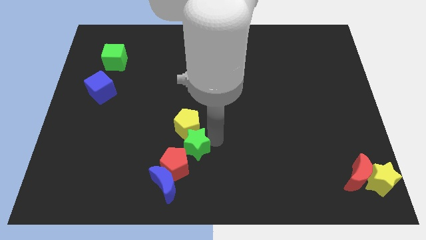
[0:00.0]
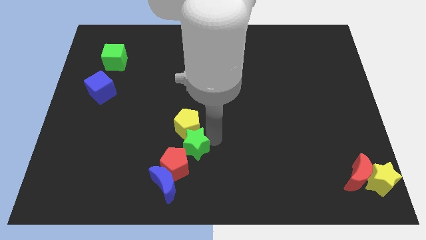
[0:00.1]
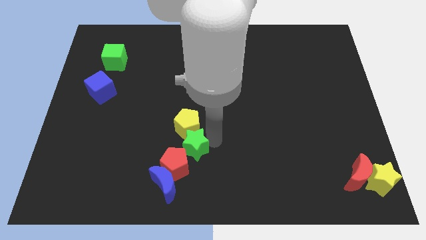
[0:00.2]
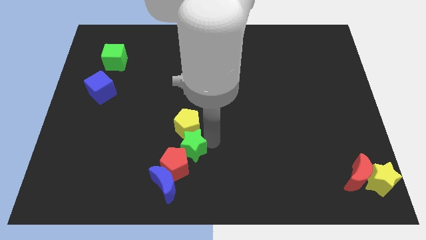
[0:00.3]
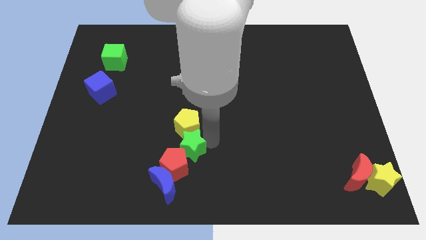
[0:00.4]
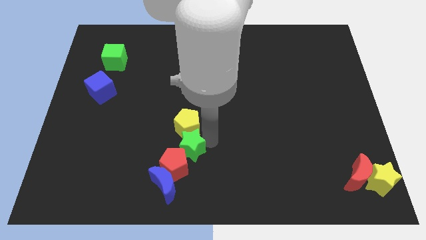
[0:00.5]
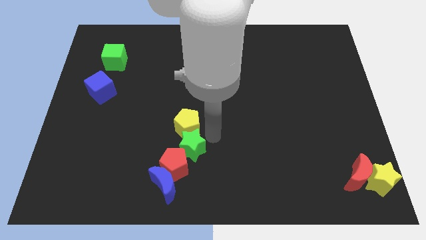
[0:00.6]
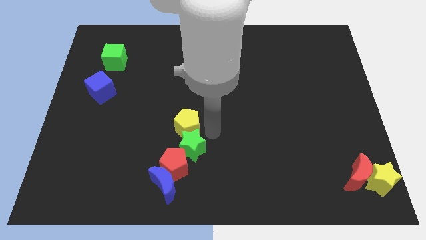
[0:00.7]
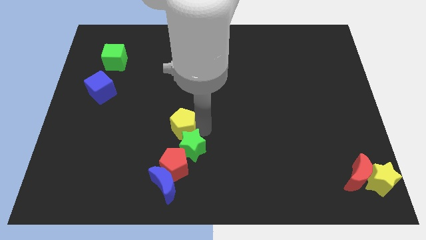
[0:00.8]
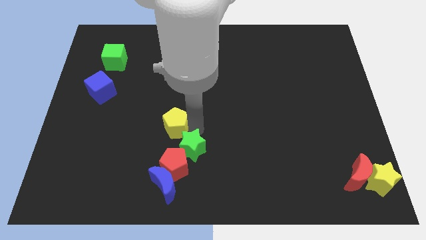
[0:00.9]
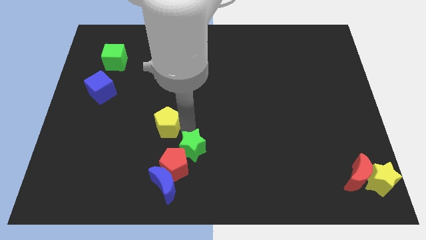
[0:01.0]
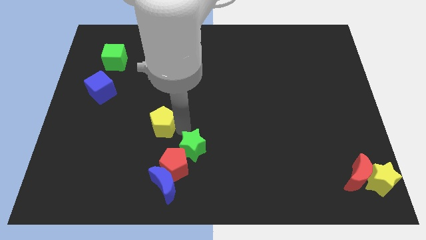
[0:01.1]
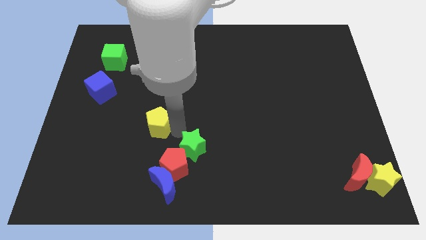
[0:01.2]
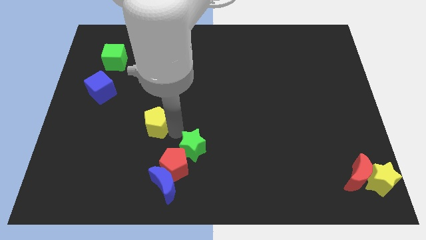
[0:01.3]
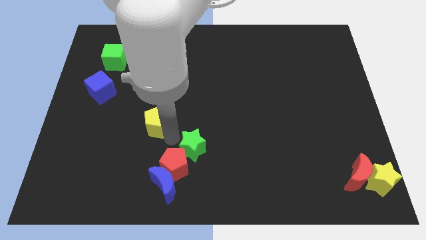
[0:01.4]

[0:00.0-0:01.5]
place yellow pentagon above red pentagon

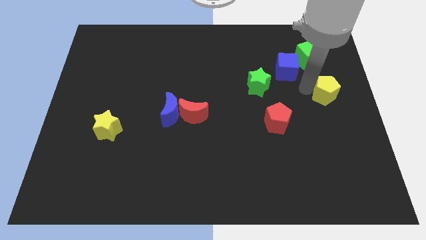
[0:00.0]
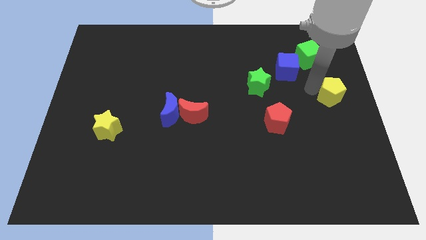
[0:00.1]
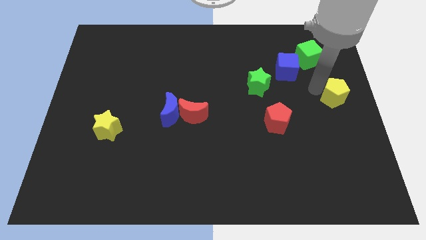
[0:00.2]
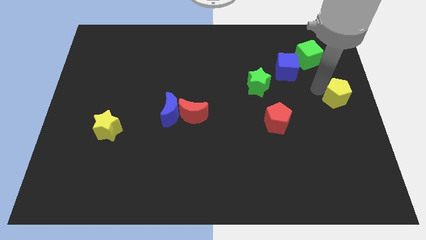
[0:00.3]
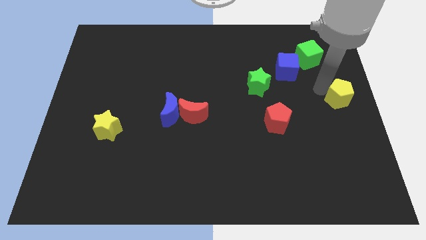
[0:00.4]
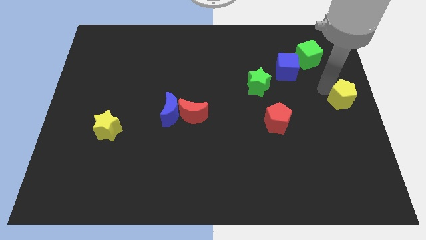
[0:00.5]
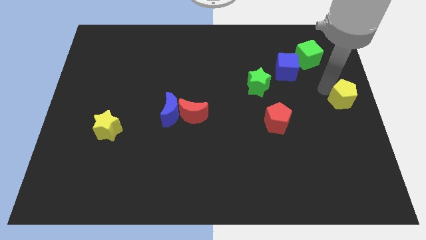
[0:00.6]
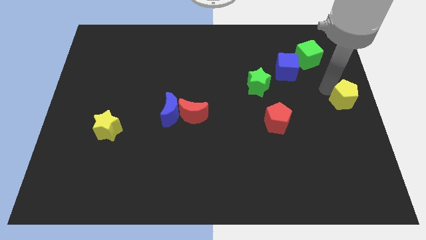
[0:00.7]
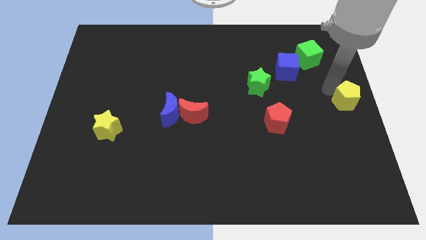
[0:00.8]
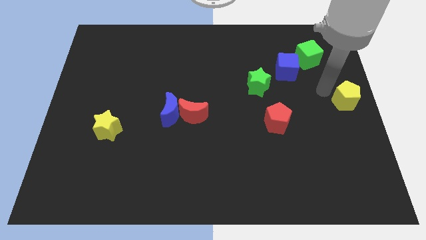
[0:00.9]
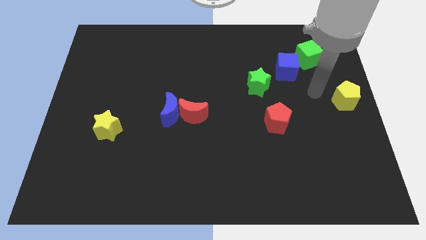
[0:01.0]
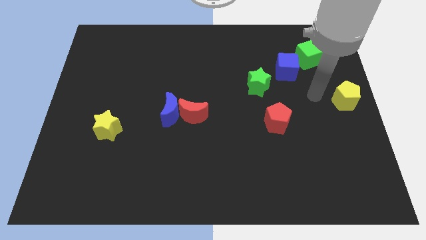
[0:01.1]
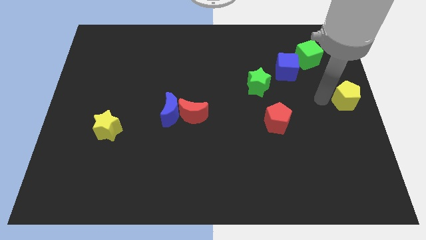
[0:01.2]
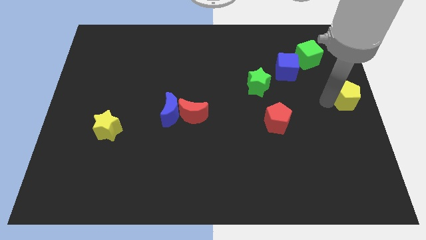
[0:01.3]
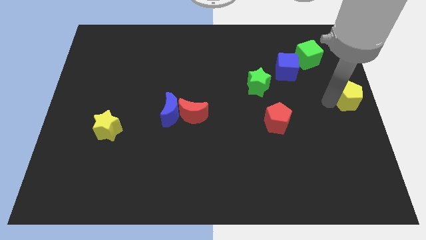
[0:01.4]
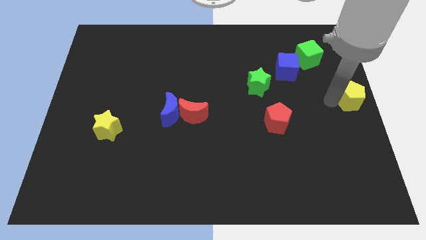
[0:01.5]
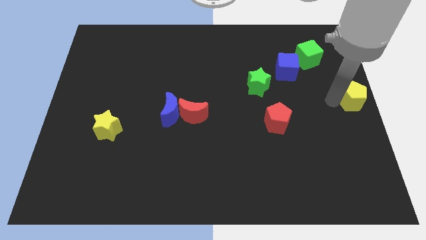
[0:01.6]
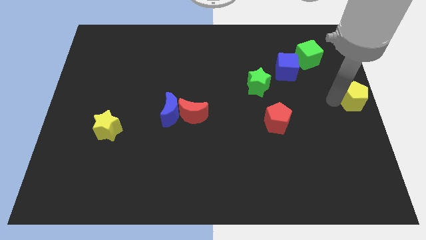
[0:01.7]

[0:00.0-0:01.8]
place the yellow pentagon towards the center right side of the board

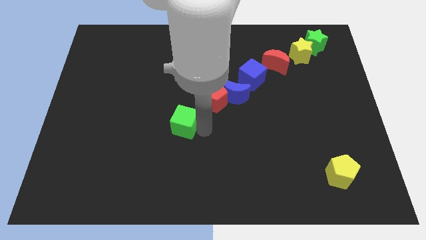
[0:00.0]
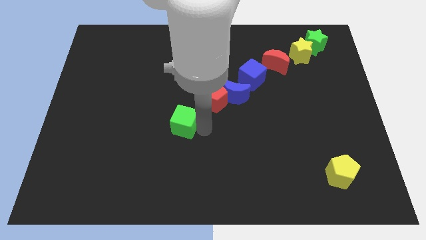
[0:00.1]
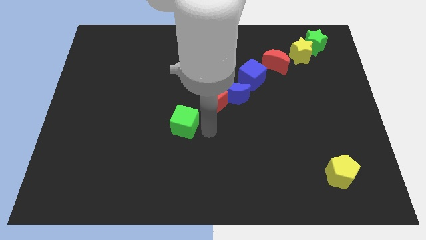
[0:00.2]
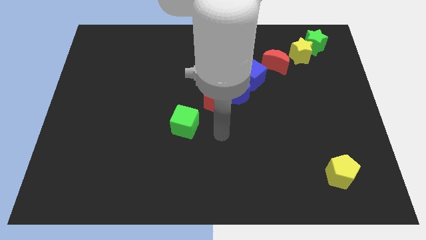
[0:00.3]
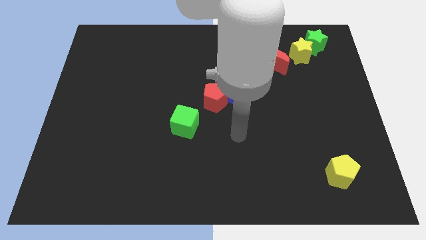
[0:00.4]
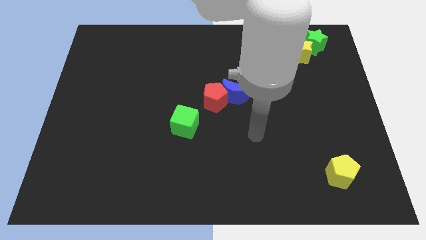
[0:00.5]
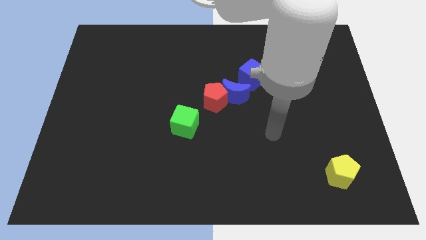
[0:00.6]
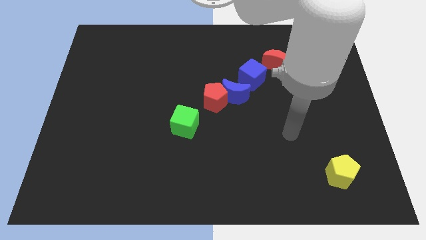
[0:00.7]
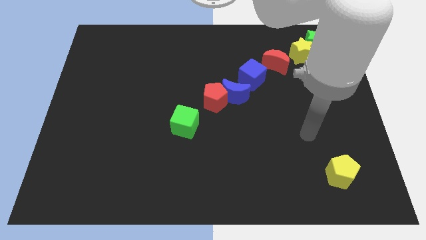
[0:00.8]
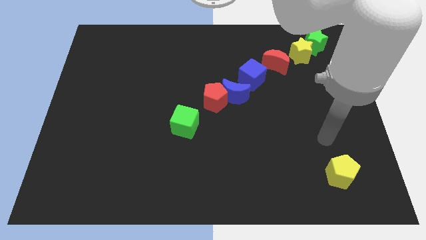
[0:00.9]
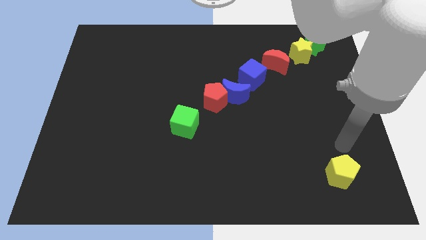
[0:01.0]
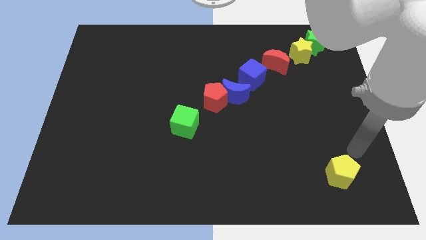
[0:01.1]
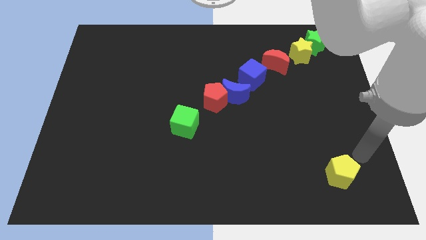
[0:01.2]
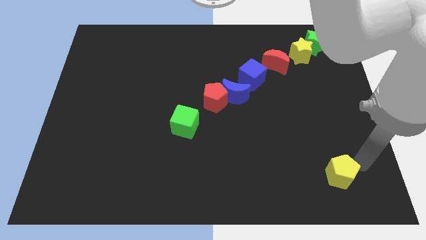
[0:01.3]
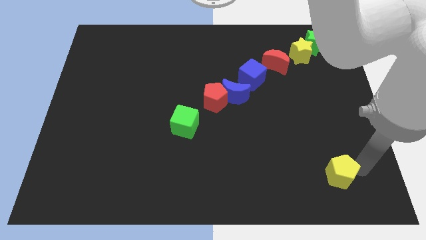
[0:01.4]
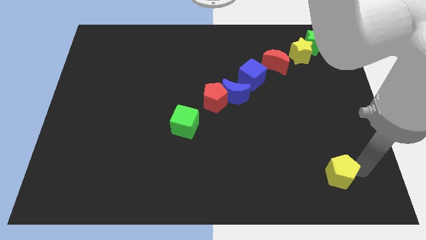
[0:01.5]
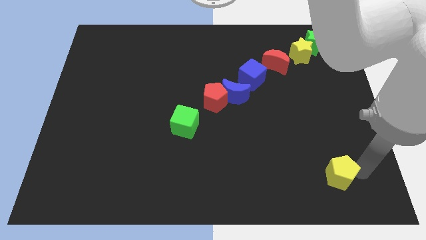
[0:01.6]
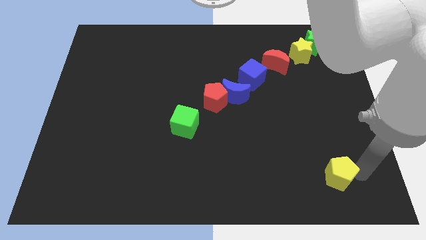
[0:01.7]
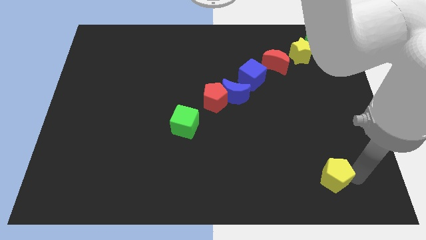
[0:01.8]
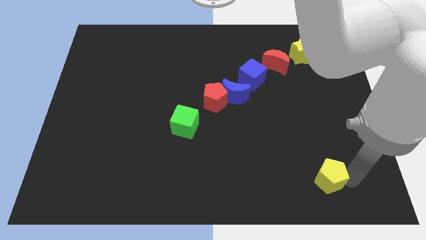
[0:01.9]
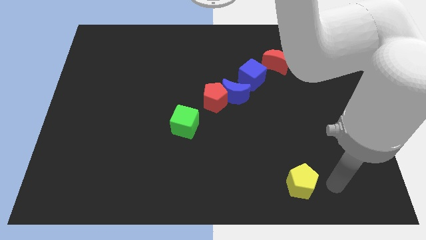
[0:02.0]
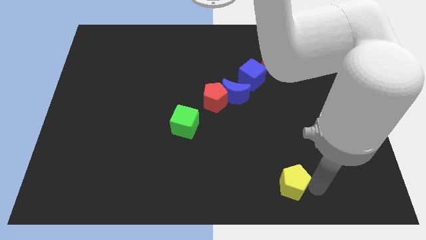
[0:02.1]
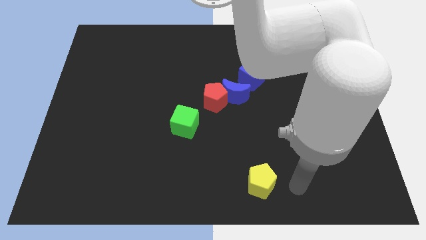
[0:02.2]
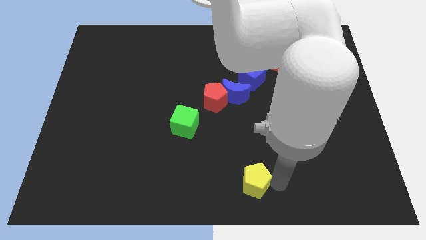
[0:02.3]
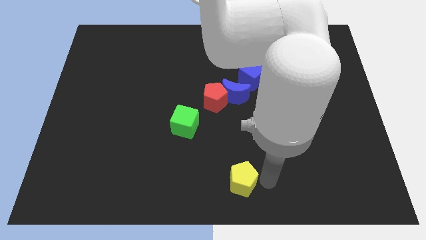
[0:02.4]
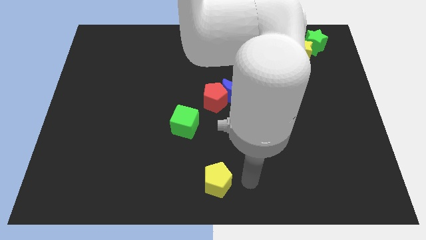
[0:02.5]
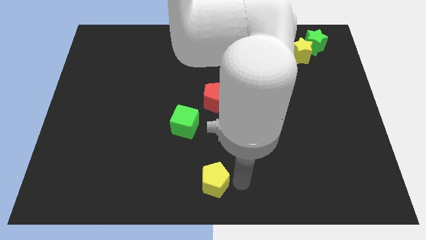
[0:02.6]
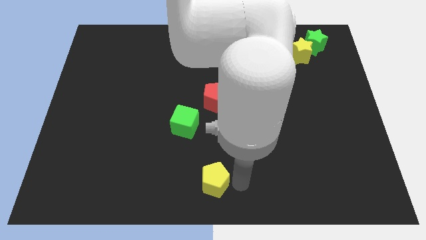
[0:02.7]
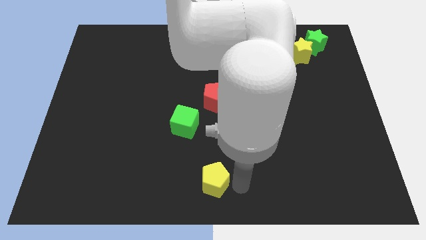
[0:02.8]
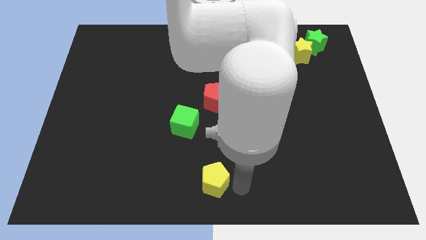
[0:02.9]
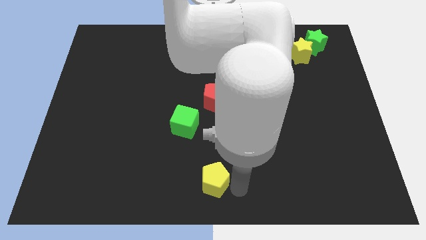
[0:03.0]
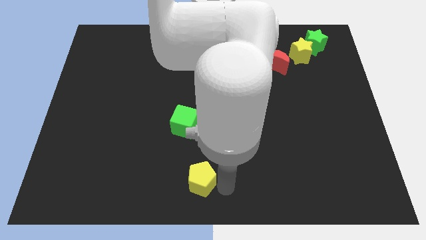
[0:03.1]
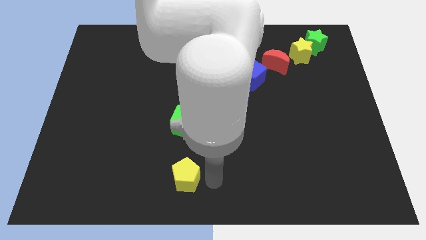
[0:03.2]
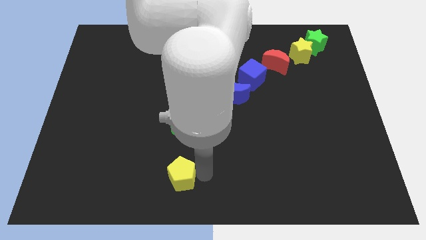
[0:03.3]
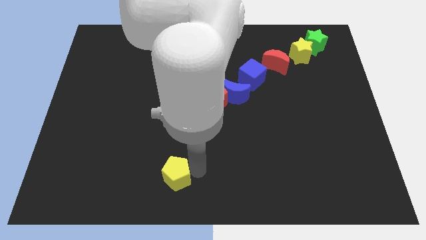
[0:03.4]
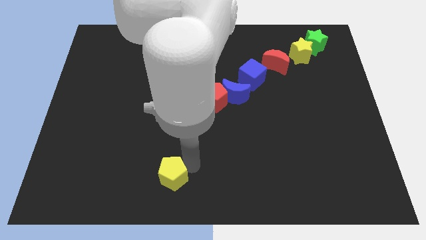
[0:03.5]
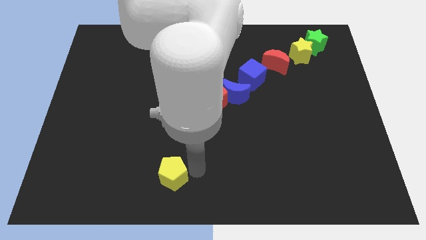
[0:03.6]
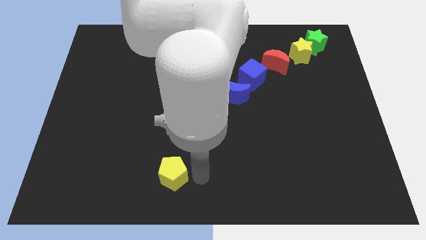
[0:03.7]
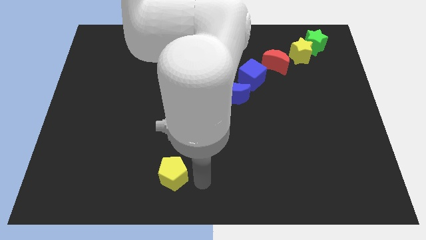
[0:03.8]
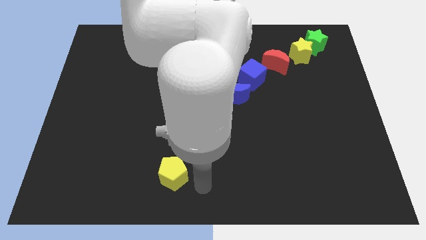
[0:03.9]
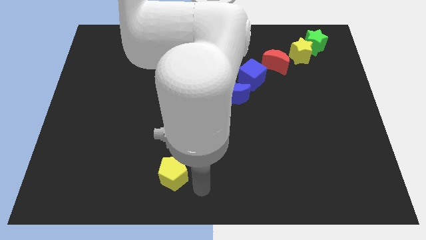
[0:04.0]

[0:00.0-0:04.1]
move yellow pentagon to the bottom left of green cube

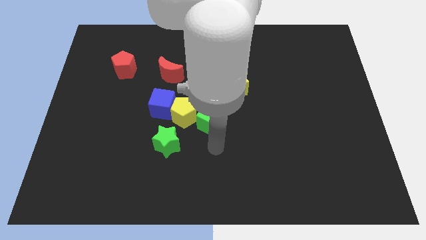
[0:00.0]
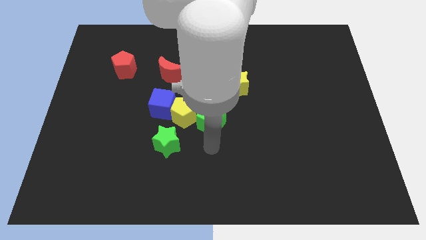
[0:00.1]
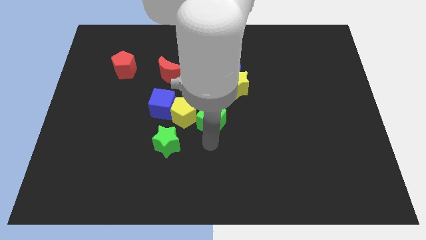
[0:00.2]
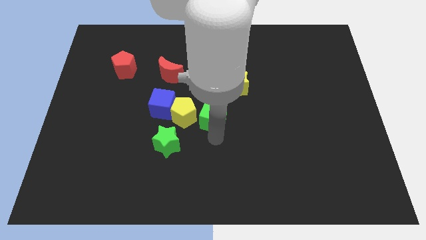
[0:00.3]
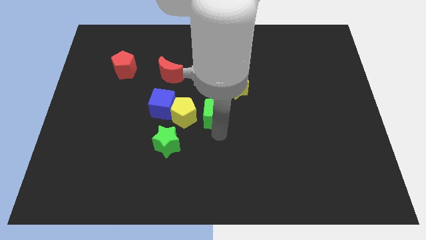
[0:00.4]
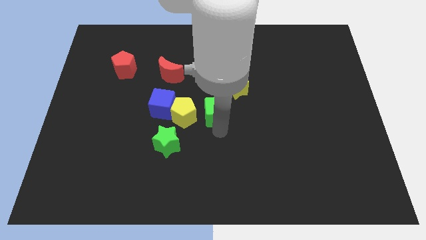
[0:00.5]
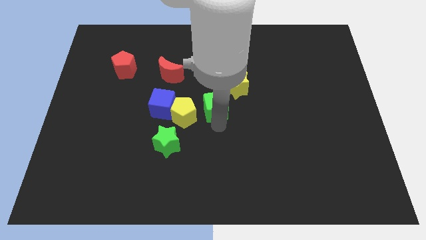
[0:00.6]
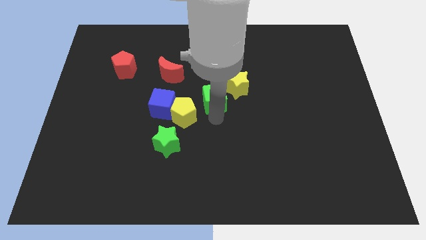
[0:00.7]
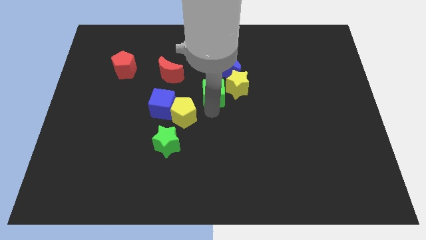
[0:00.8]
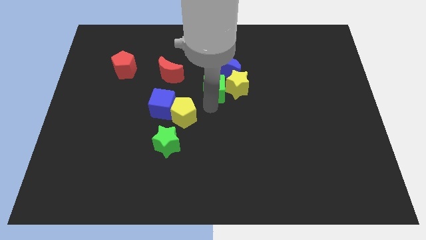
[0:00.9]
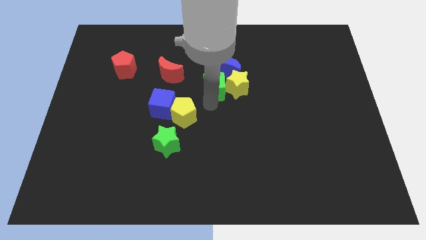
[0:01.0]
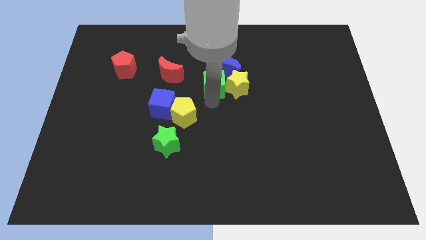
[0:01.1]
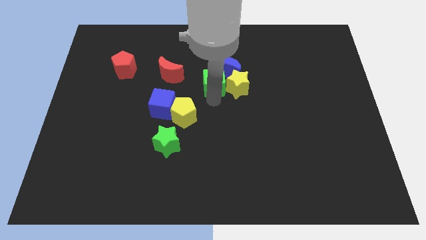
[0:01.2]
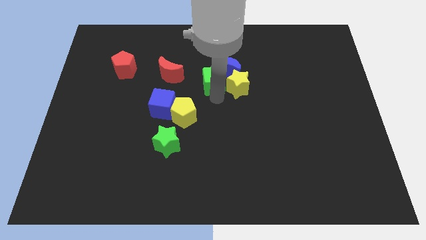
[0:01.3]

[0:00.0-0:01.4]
push the green cube into the blue moon

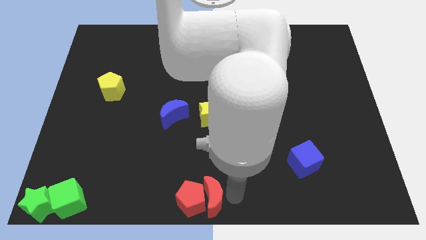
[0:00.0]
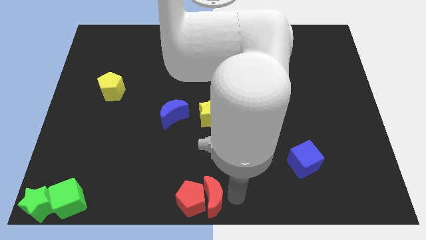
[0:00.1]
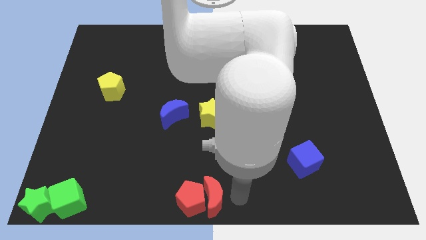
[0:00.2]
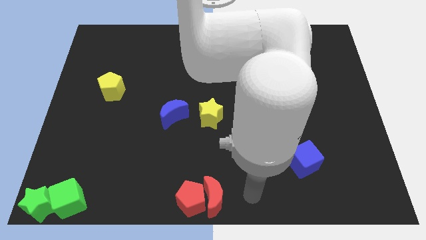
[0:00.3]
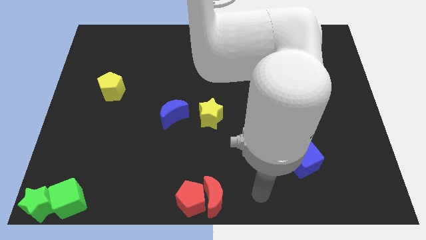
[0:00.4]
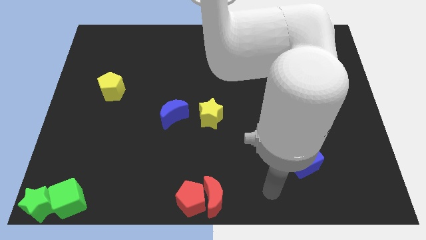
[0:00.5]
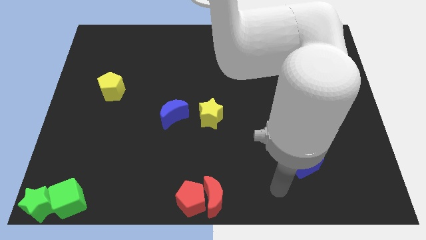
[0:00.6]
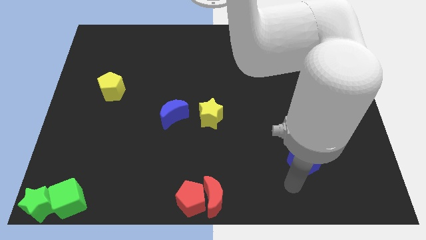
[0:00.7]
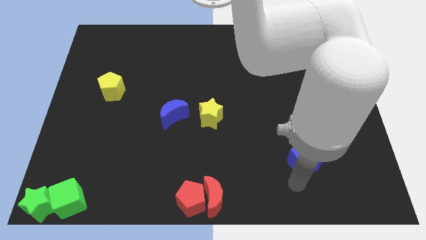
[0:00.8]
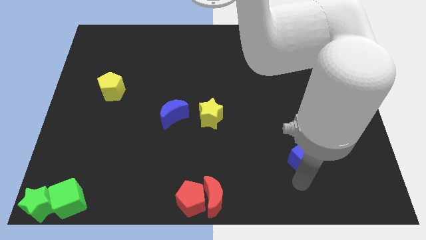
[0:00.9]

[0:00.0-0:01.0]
point your arm below blue cube
